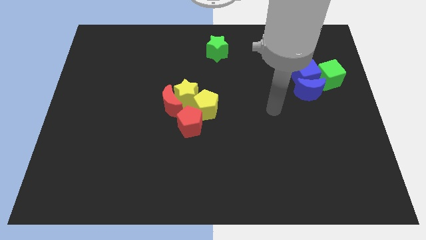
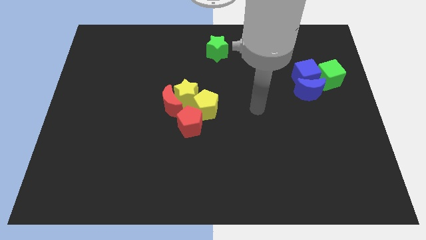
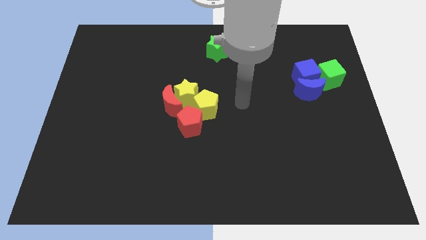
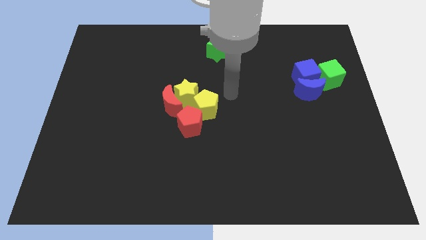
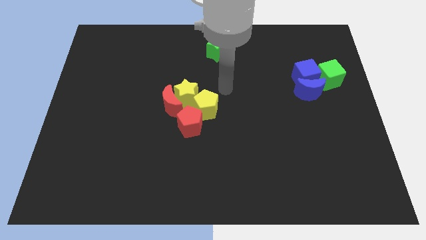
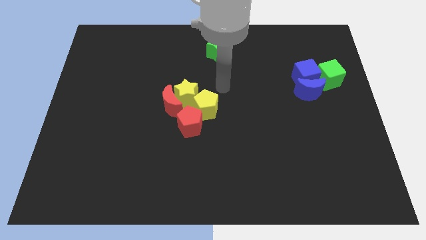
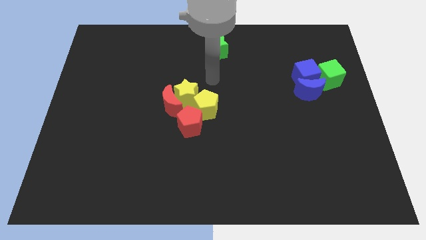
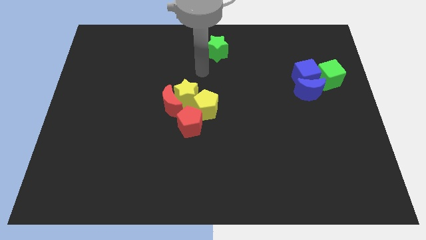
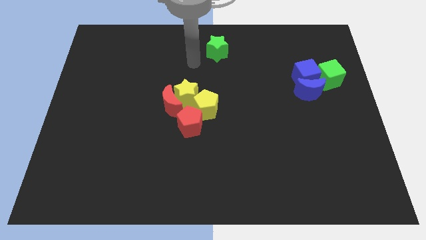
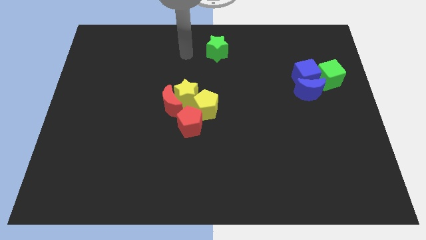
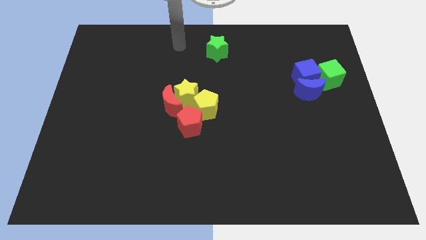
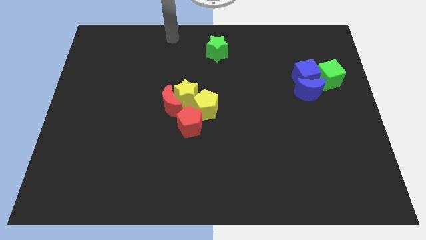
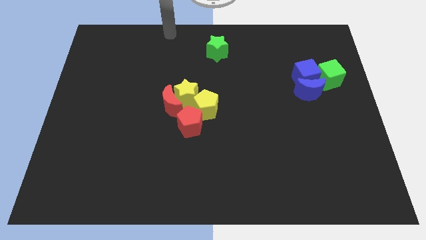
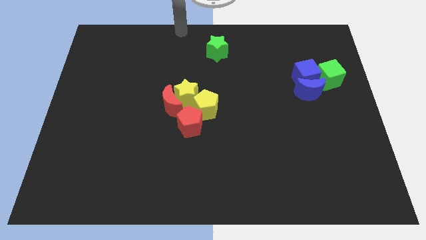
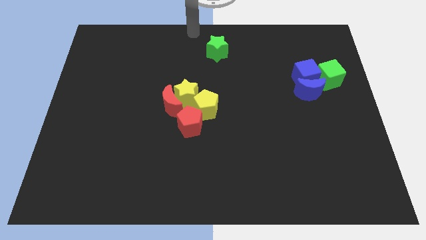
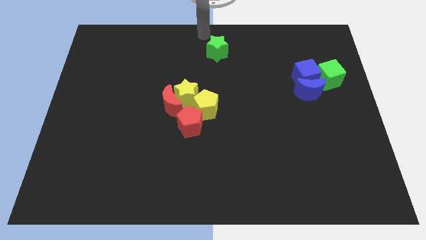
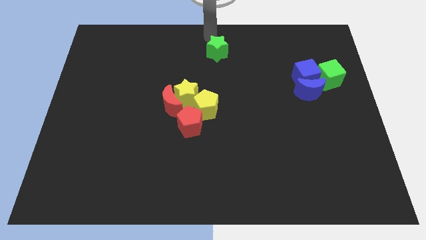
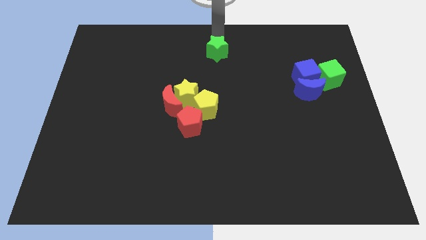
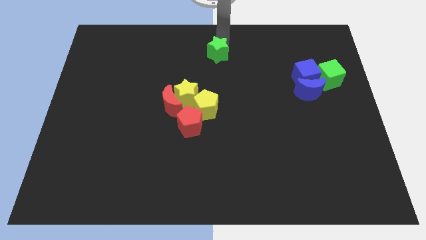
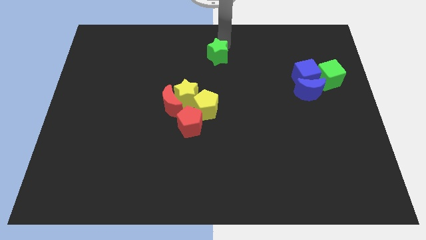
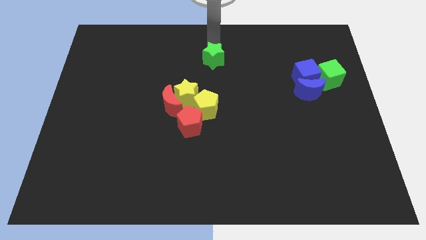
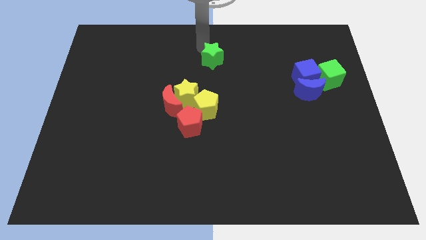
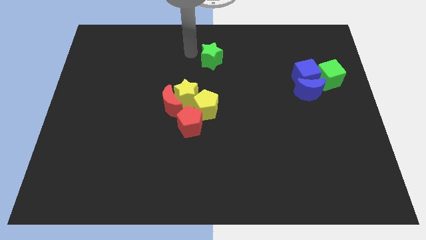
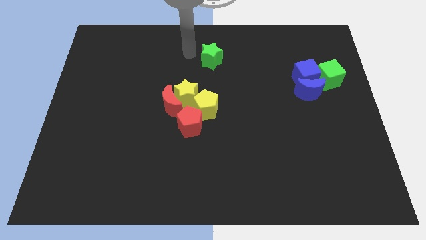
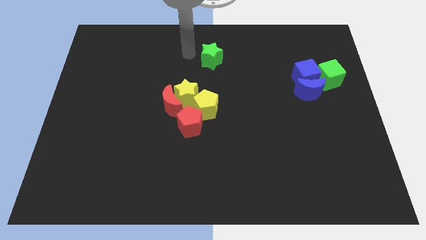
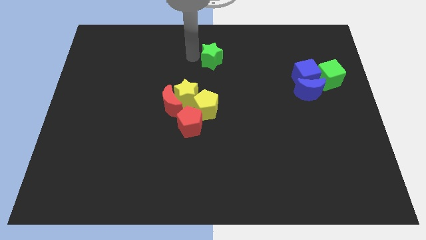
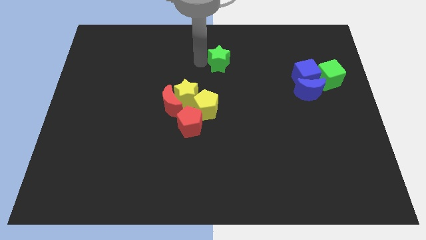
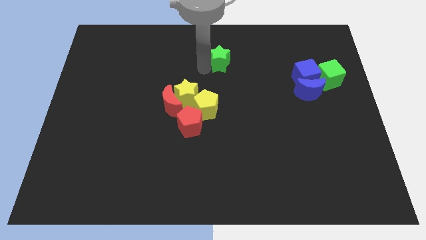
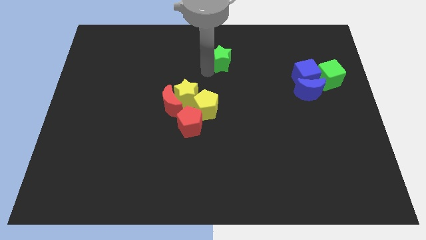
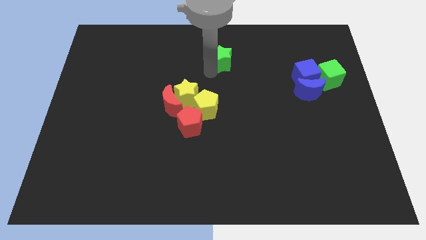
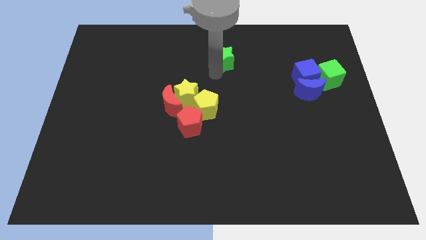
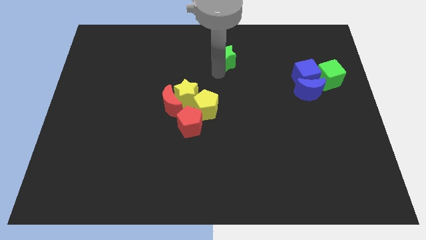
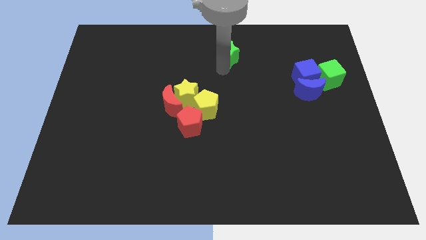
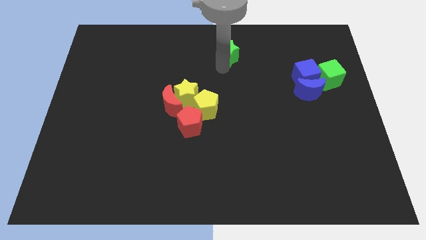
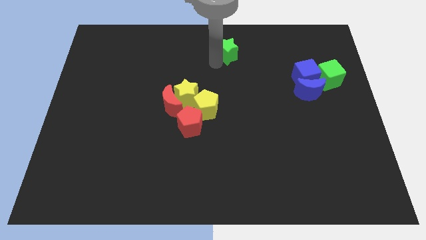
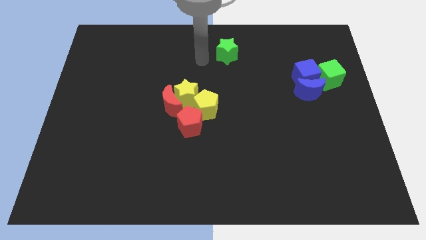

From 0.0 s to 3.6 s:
slightly push the green star to the top right of the board

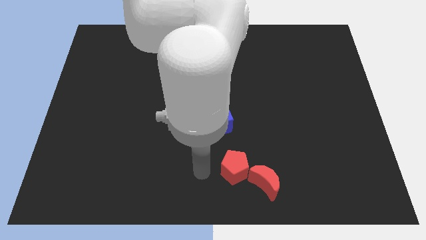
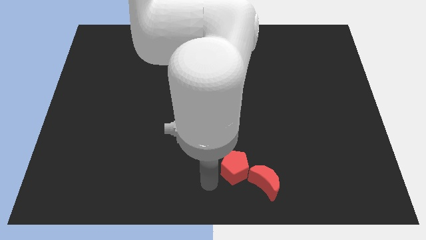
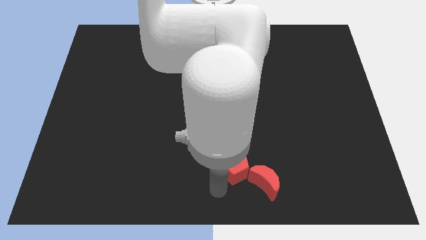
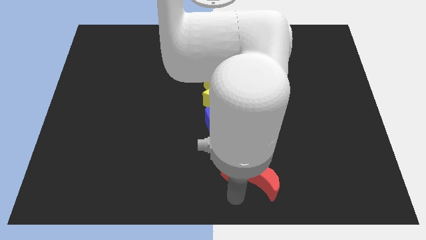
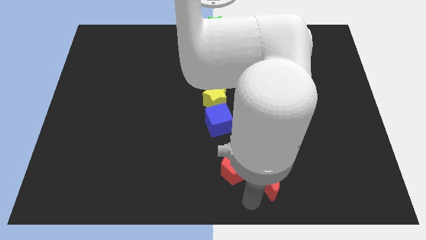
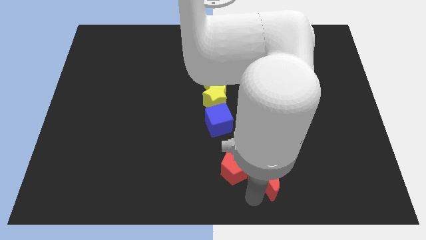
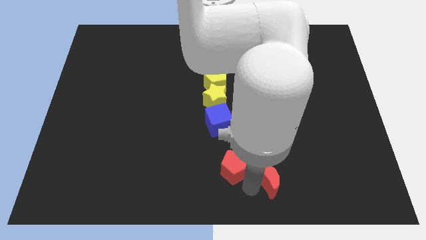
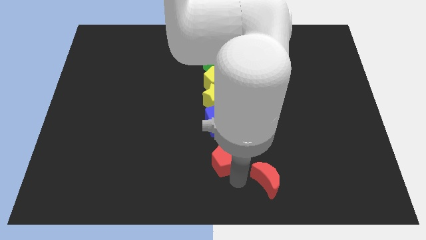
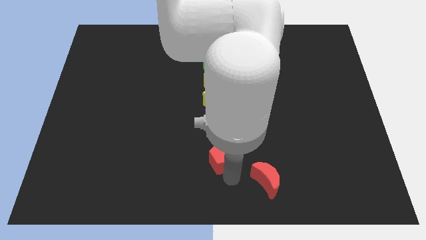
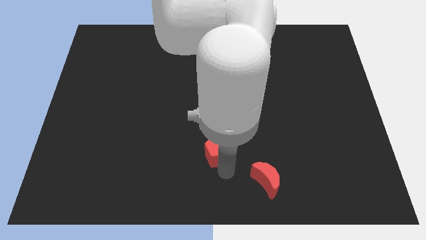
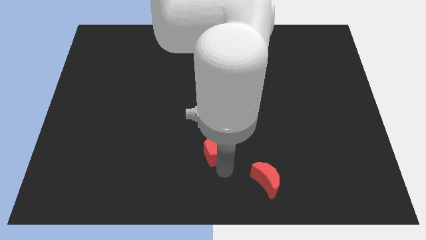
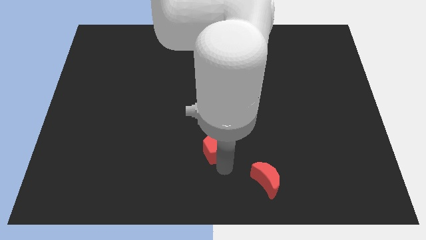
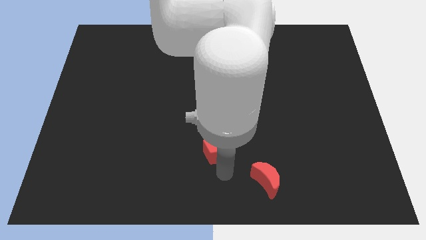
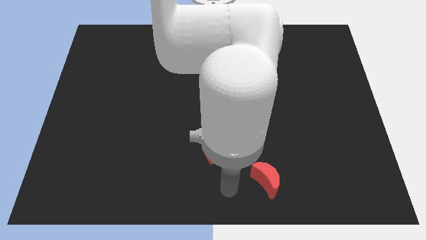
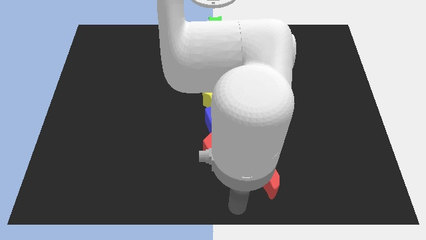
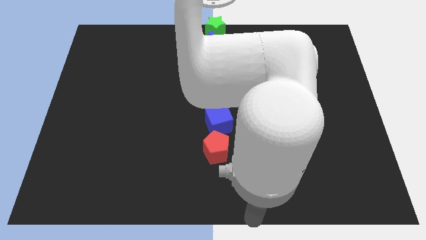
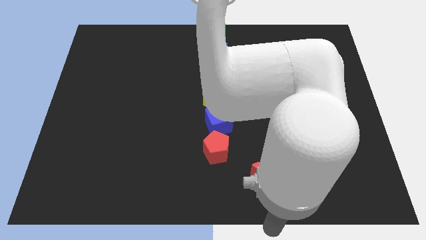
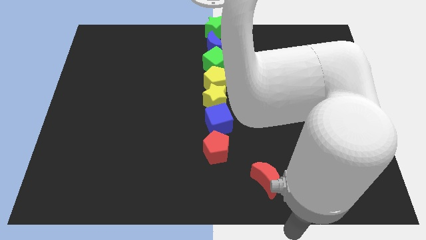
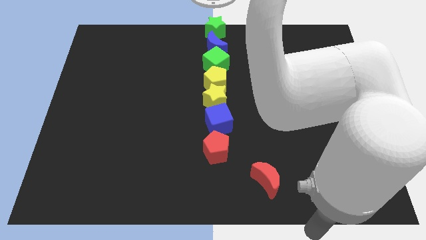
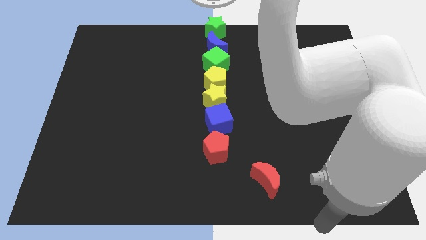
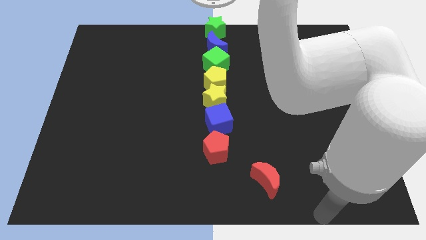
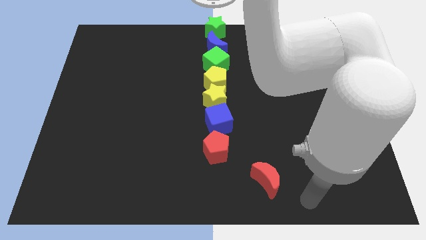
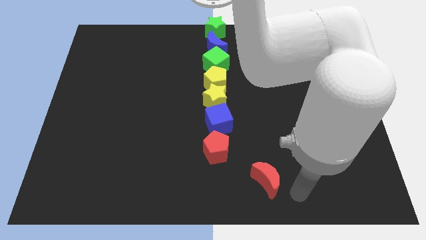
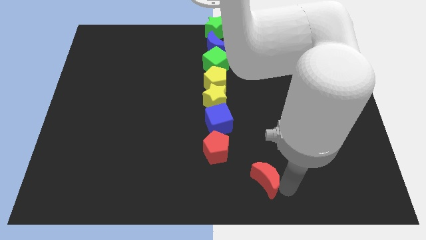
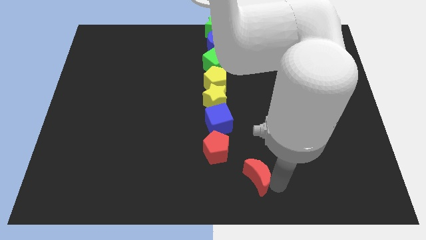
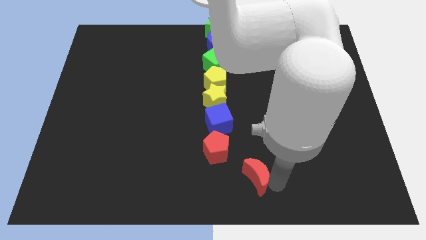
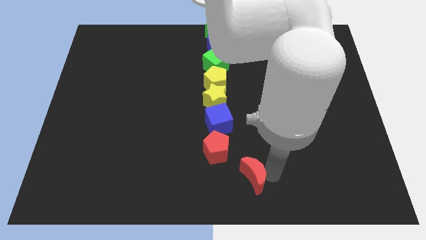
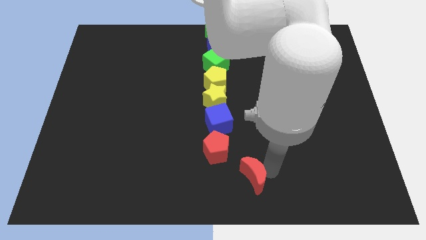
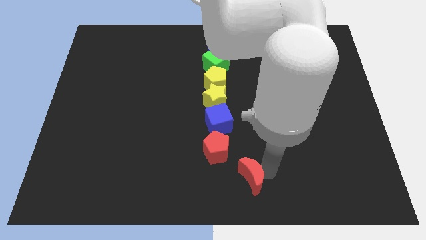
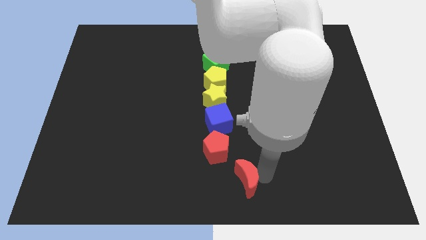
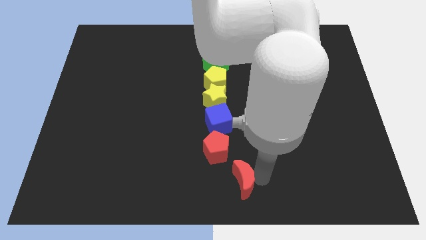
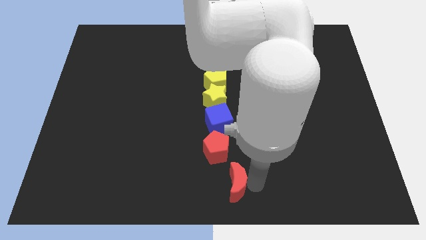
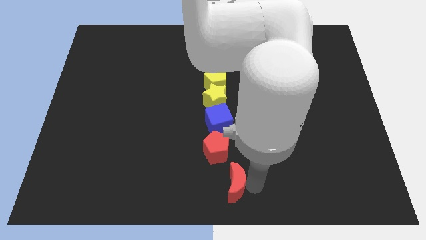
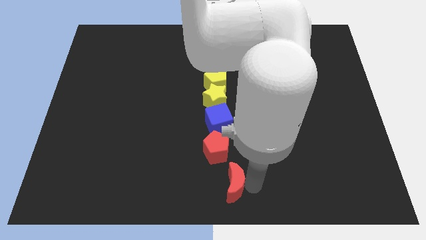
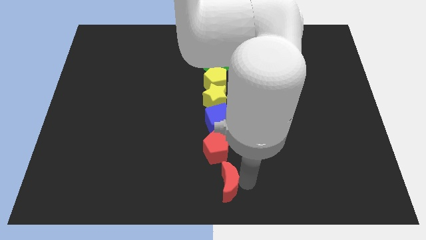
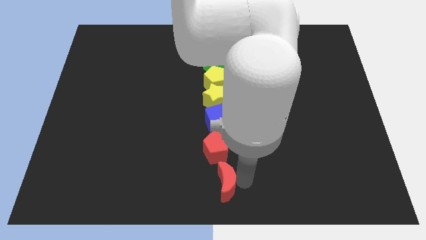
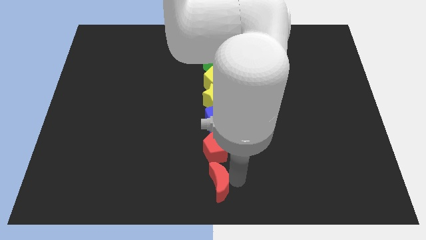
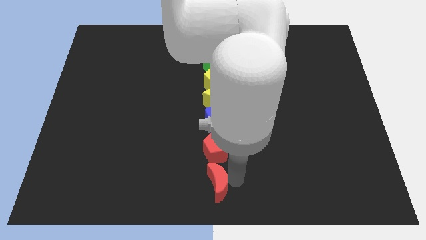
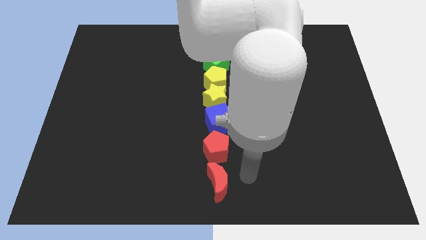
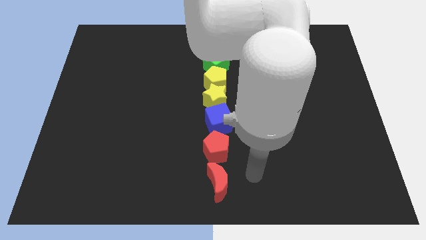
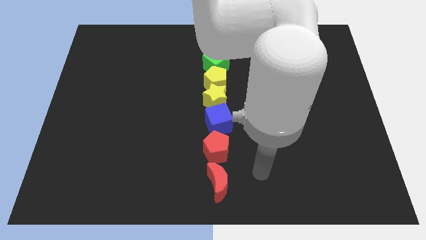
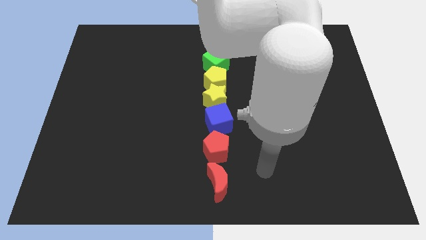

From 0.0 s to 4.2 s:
drag red blocks below blue cube

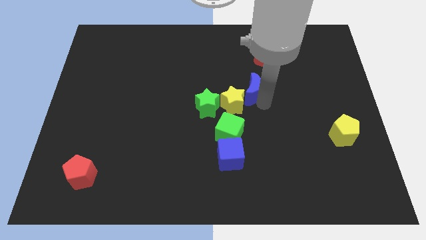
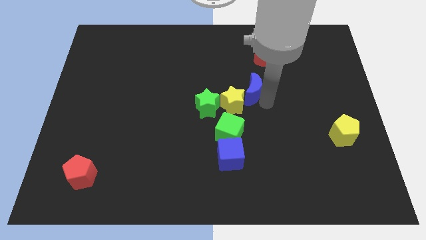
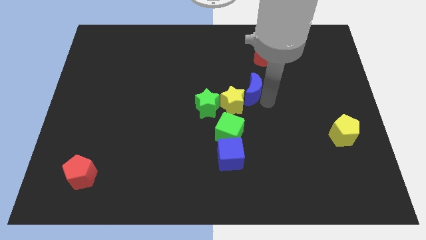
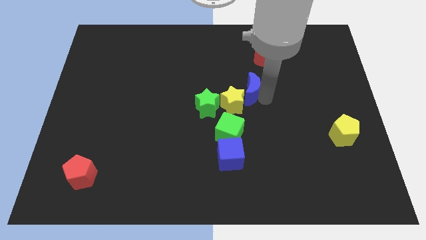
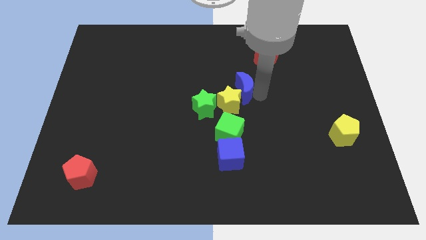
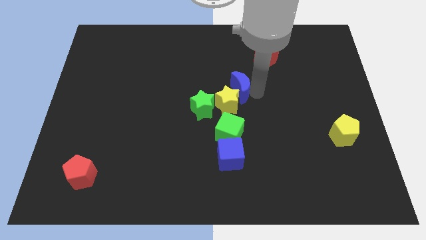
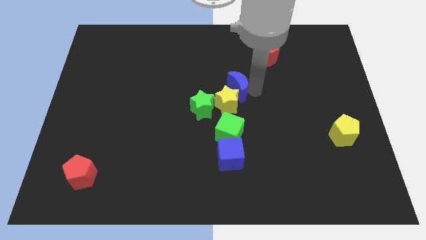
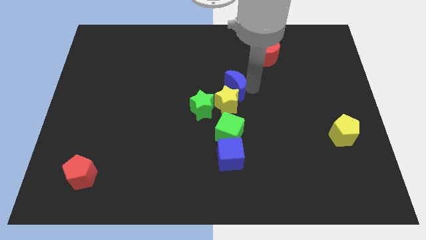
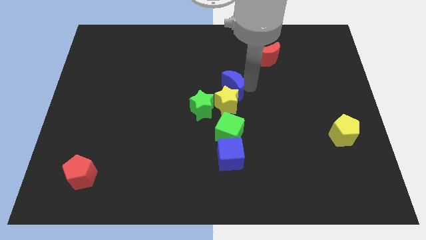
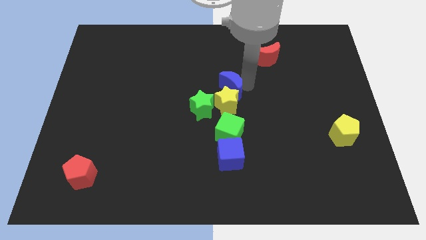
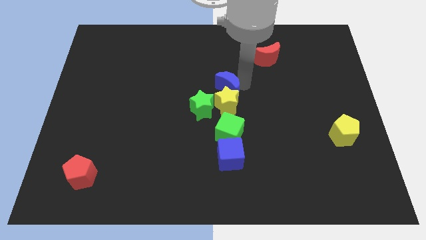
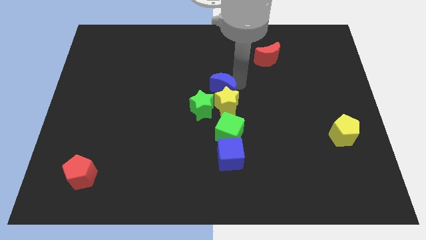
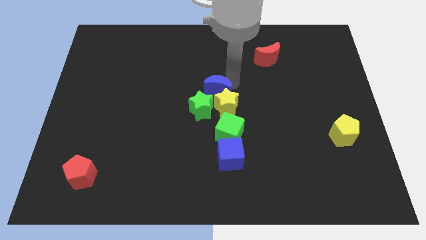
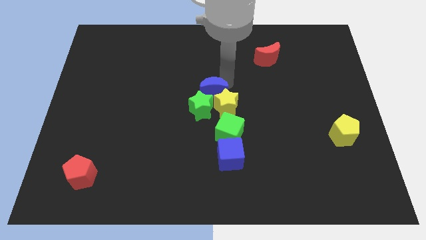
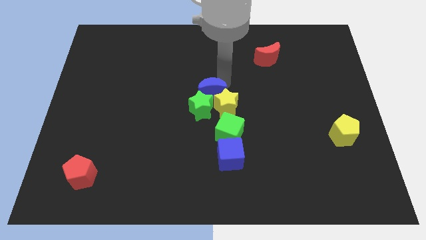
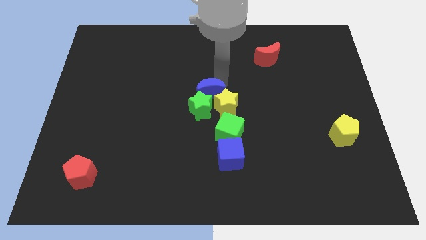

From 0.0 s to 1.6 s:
push the blue crescent to the top of both yellow and green stars
